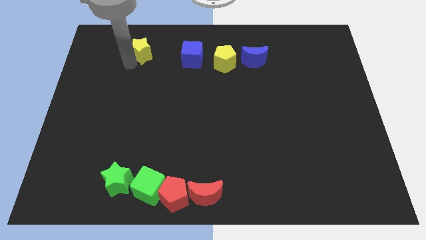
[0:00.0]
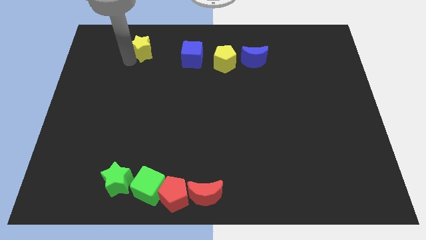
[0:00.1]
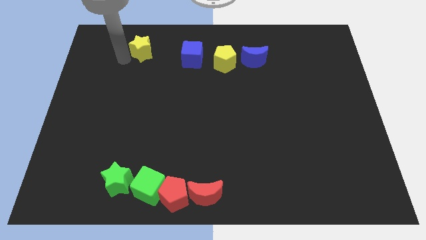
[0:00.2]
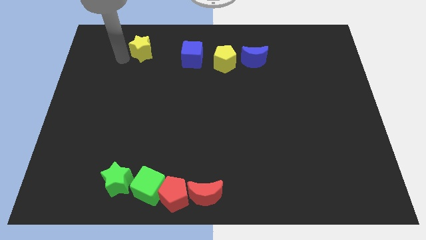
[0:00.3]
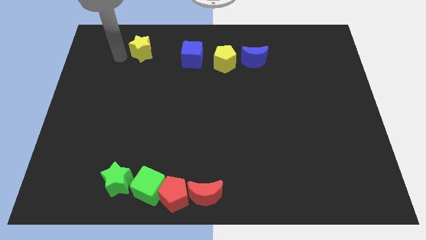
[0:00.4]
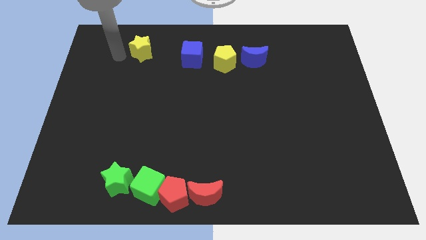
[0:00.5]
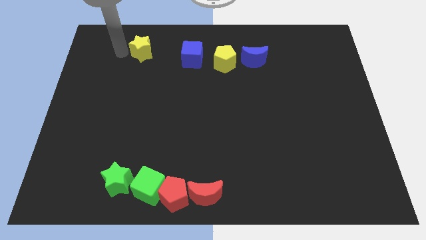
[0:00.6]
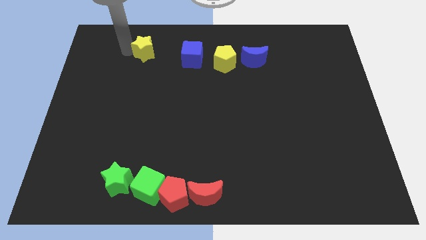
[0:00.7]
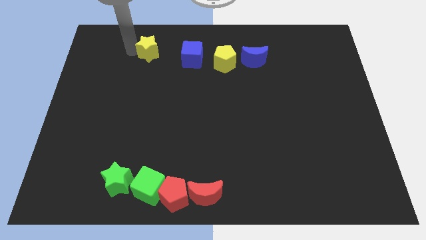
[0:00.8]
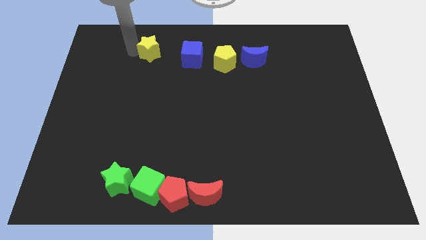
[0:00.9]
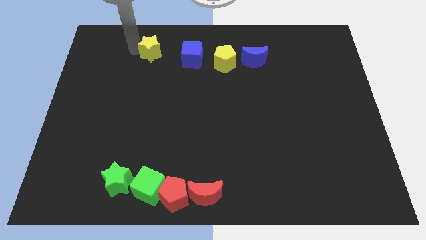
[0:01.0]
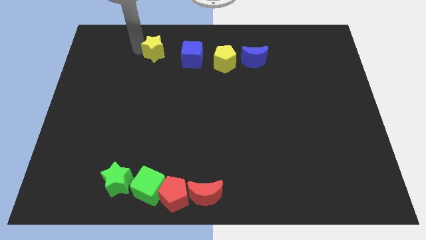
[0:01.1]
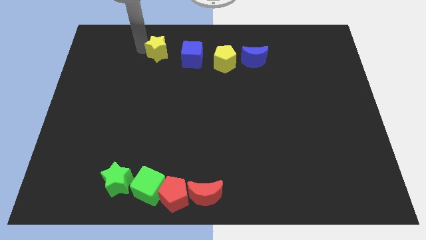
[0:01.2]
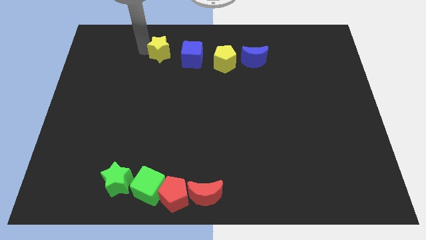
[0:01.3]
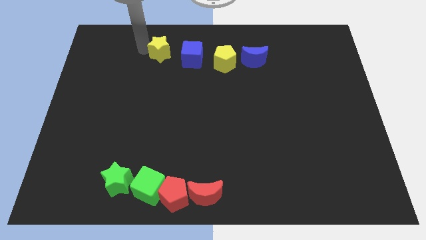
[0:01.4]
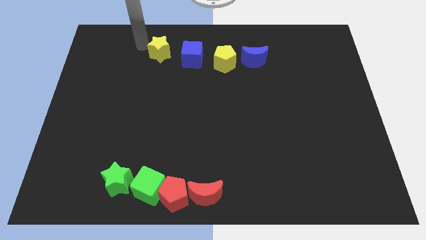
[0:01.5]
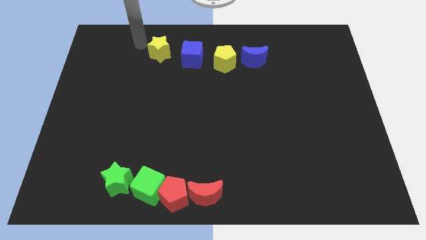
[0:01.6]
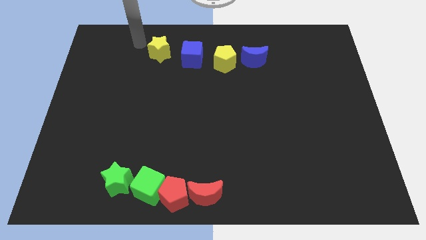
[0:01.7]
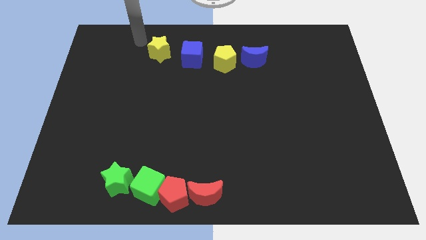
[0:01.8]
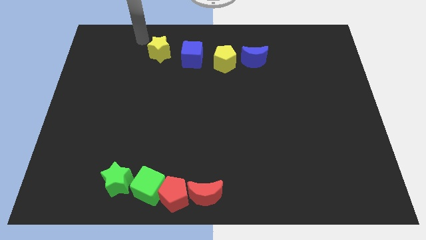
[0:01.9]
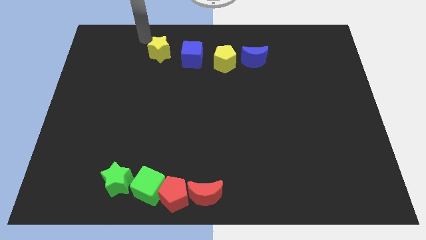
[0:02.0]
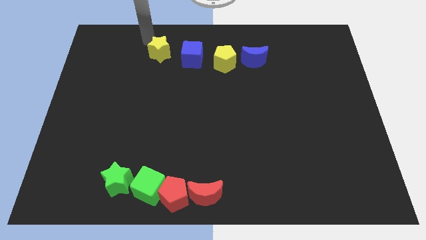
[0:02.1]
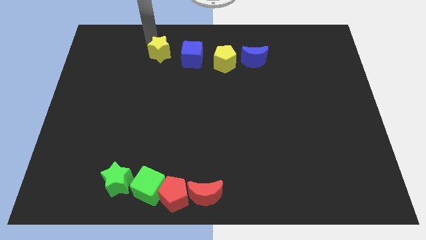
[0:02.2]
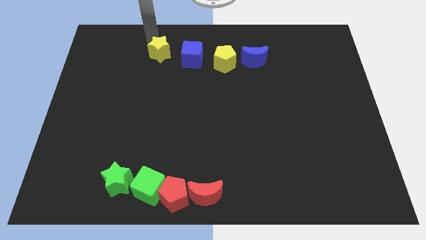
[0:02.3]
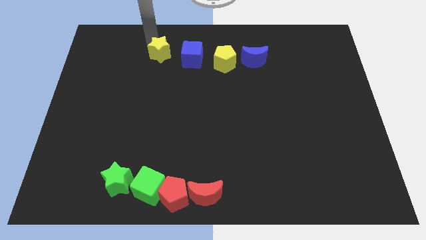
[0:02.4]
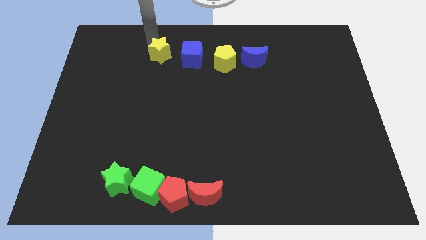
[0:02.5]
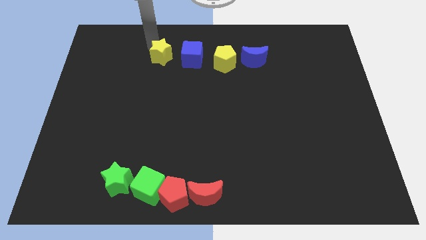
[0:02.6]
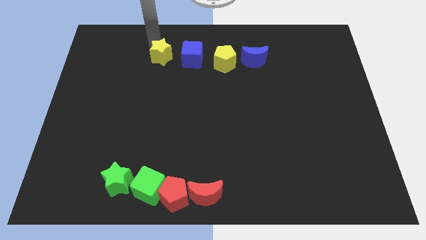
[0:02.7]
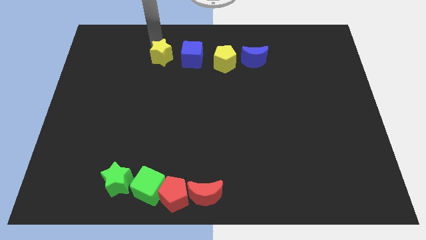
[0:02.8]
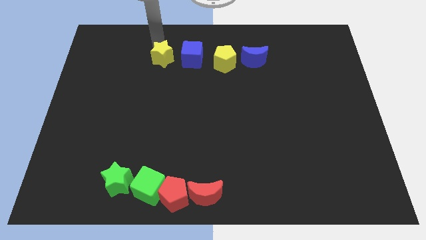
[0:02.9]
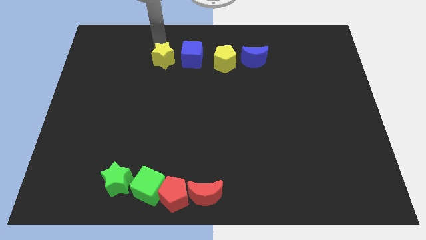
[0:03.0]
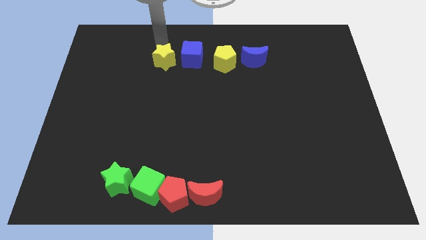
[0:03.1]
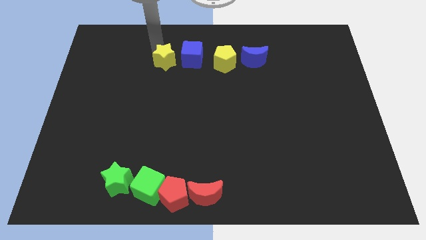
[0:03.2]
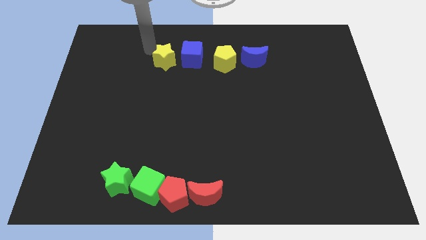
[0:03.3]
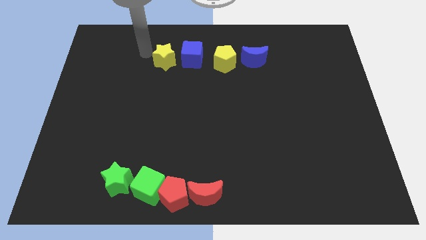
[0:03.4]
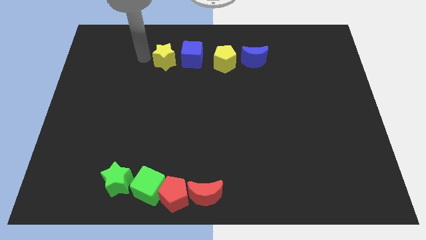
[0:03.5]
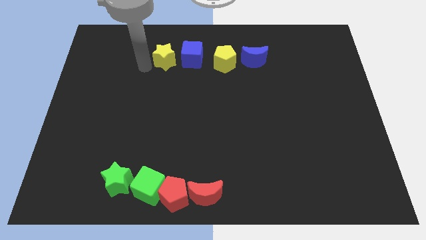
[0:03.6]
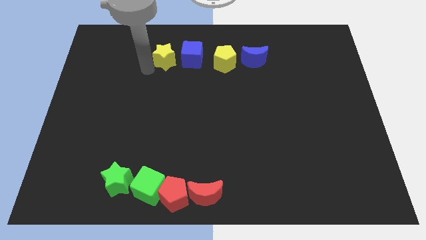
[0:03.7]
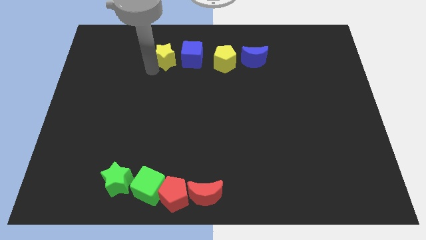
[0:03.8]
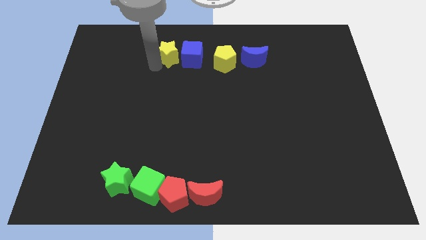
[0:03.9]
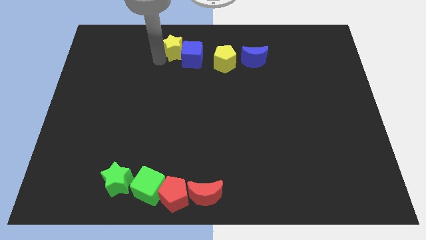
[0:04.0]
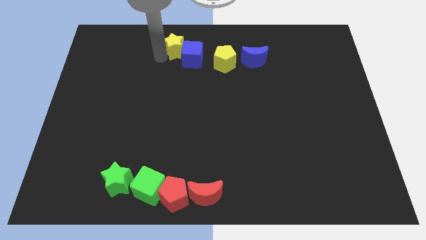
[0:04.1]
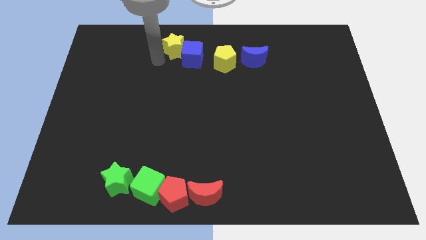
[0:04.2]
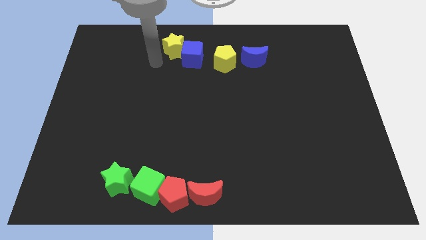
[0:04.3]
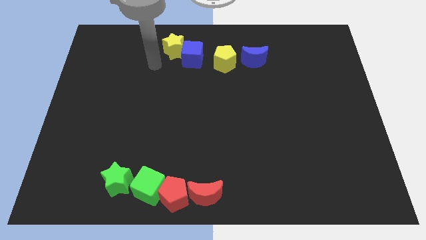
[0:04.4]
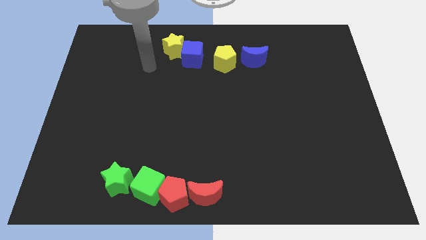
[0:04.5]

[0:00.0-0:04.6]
place the yellow star beside the blue cube to form a line with a group of blocks

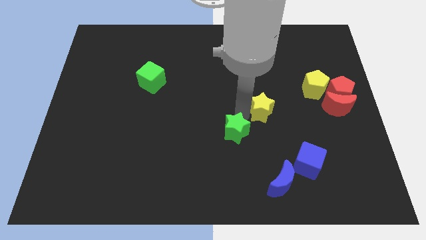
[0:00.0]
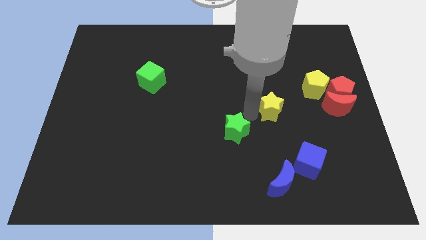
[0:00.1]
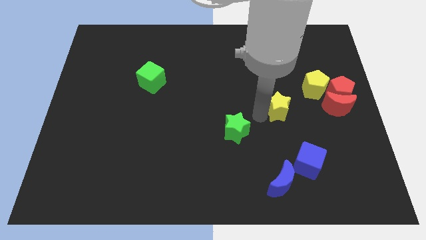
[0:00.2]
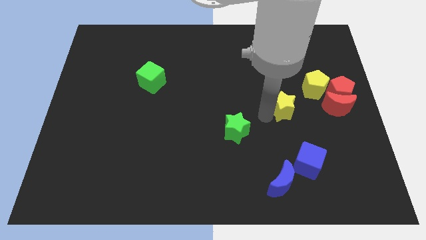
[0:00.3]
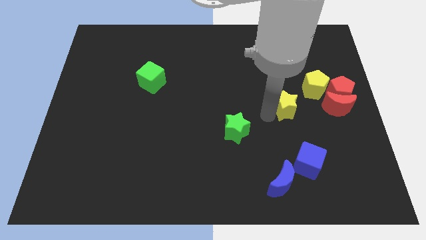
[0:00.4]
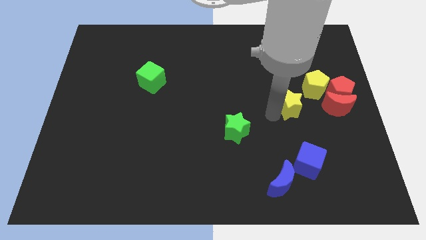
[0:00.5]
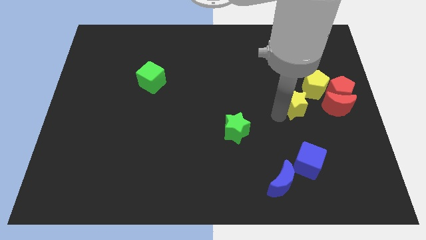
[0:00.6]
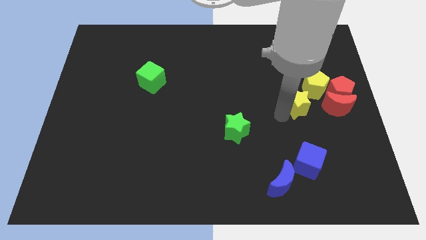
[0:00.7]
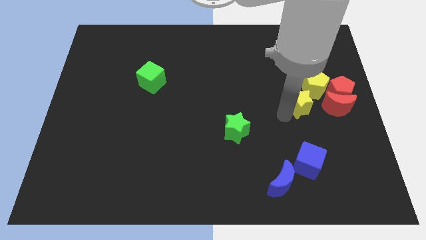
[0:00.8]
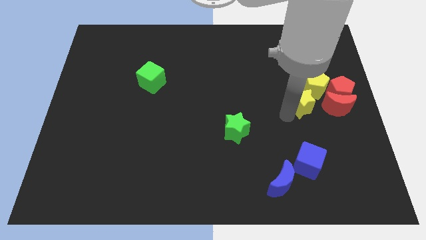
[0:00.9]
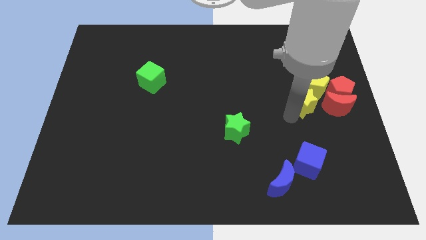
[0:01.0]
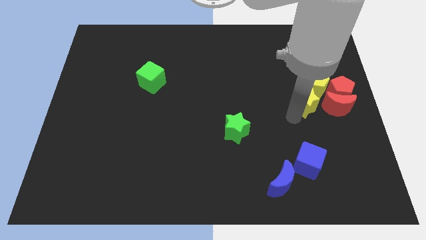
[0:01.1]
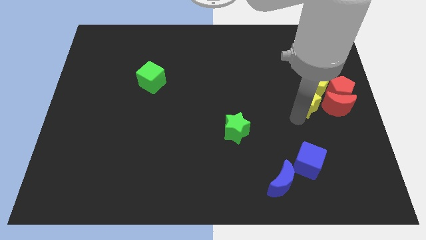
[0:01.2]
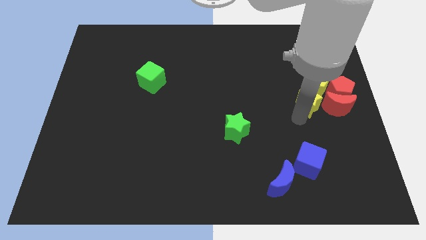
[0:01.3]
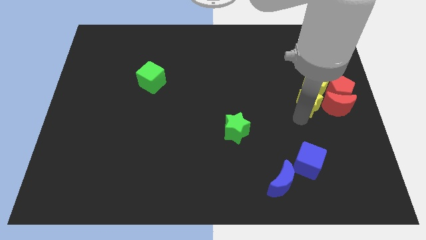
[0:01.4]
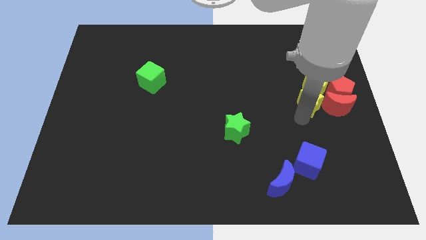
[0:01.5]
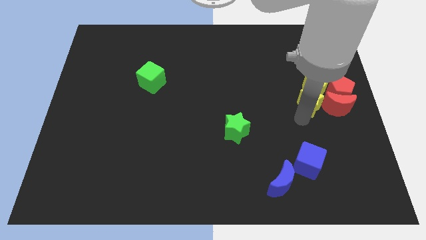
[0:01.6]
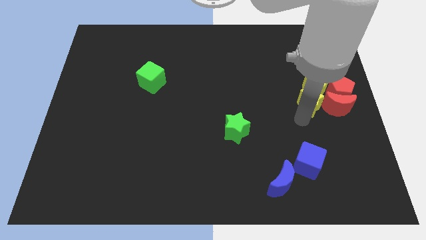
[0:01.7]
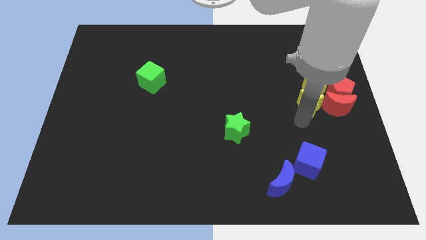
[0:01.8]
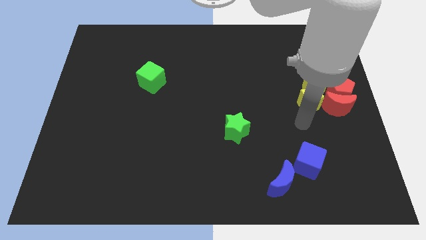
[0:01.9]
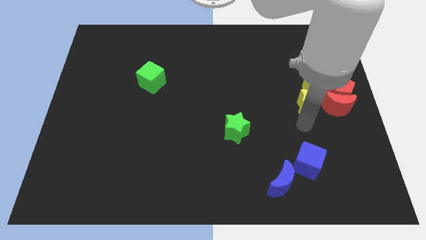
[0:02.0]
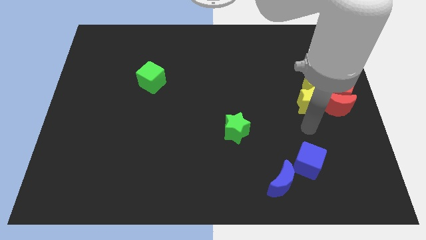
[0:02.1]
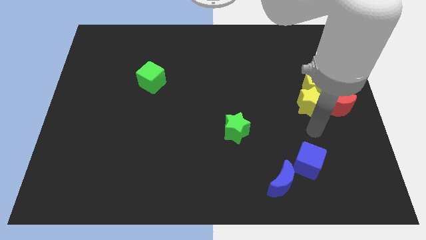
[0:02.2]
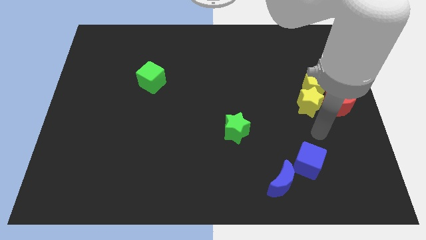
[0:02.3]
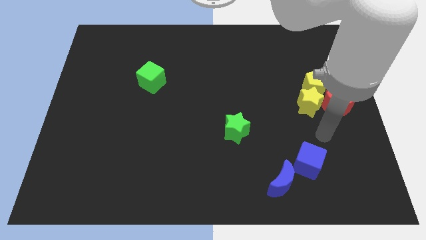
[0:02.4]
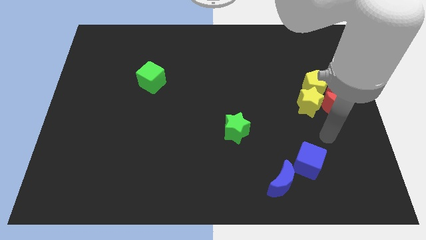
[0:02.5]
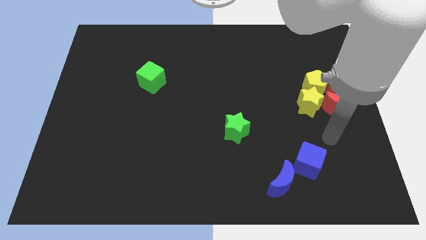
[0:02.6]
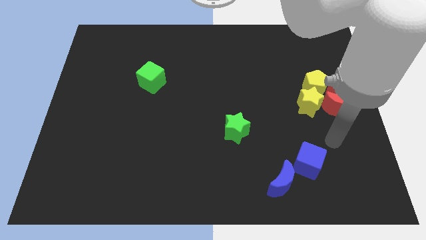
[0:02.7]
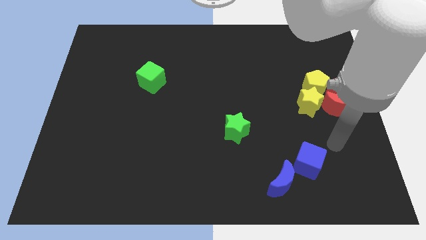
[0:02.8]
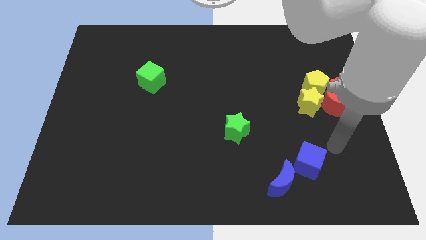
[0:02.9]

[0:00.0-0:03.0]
move yellow star towards yellow pentagan

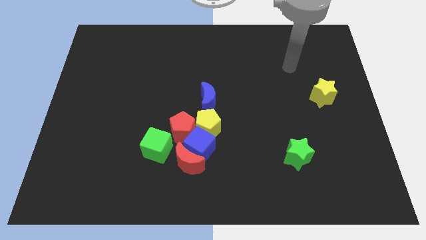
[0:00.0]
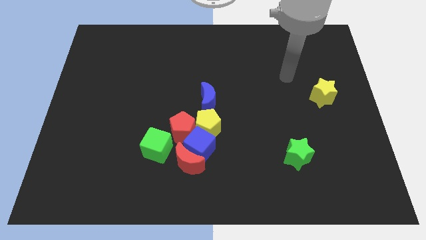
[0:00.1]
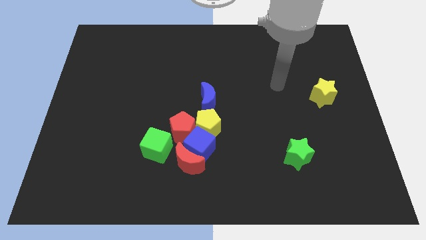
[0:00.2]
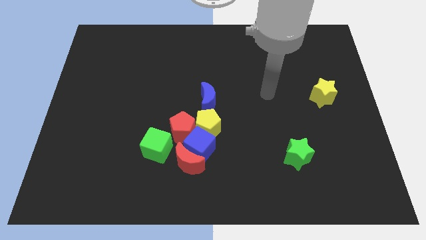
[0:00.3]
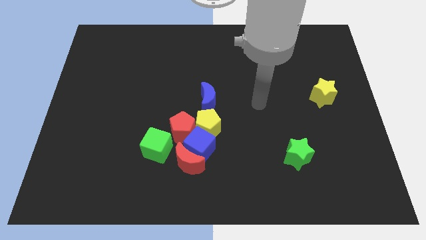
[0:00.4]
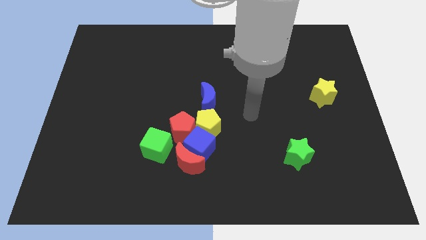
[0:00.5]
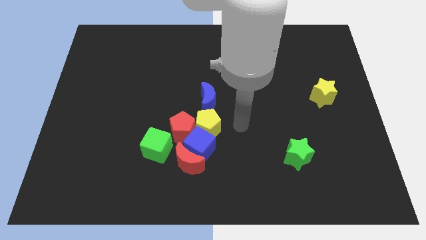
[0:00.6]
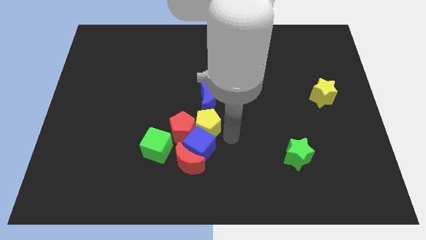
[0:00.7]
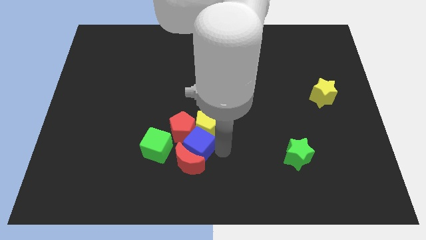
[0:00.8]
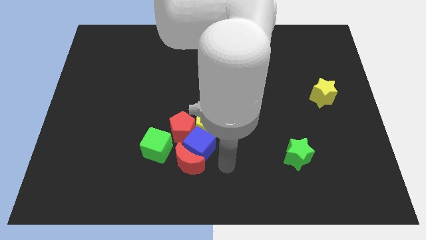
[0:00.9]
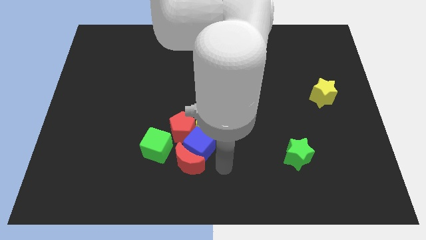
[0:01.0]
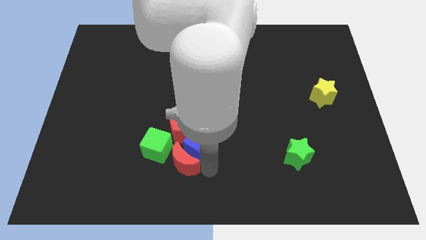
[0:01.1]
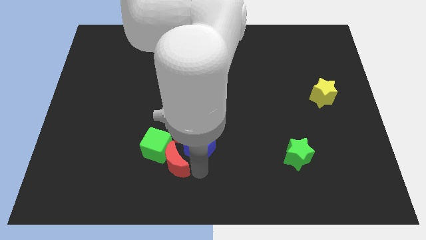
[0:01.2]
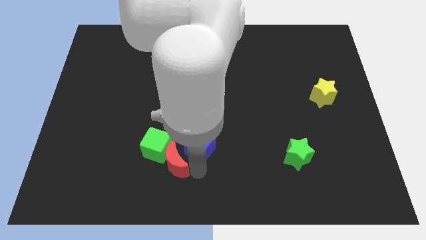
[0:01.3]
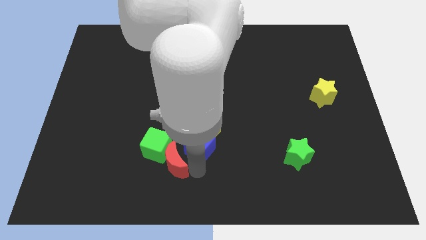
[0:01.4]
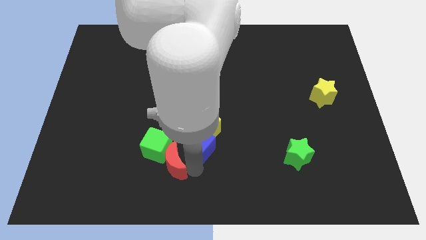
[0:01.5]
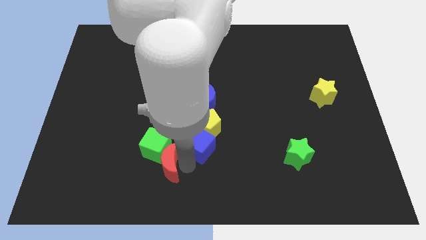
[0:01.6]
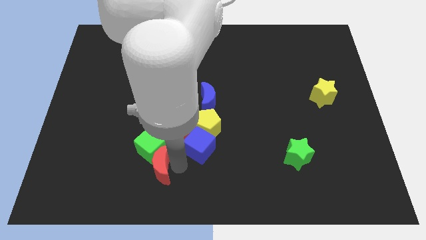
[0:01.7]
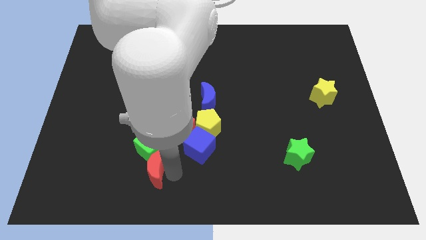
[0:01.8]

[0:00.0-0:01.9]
move your arm towards the bottom right to the red crescent
